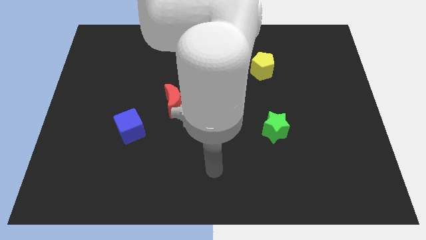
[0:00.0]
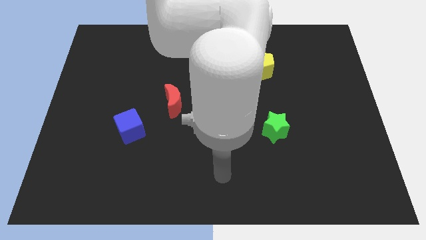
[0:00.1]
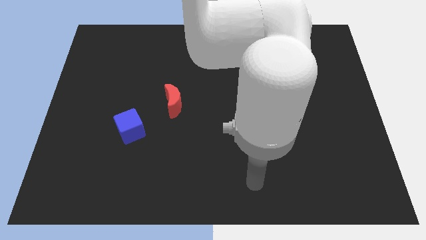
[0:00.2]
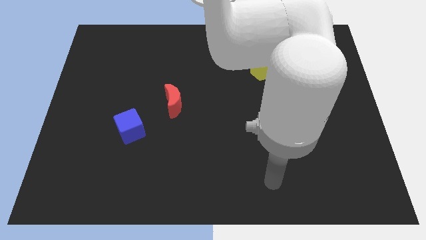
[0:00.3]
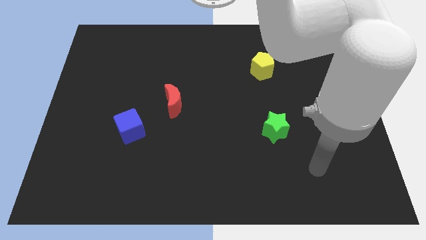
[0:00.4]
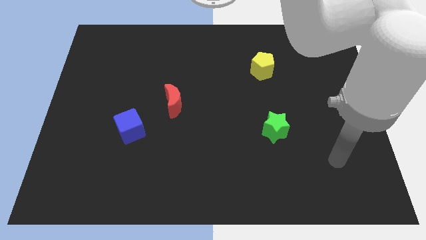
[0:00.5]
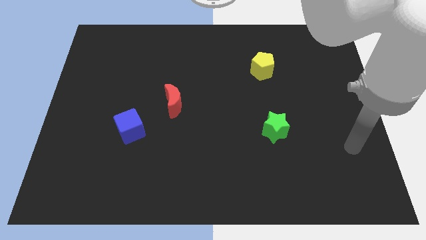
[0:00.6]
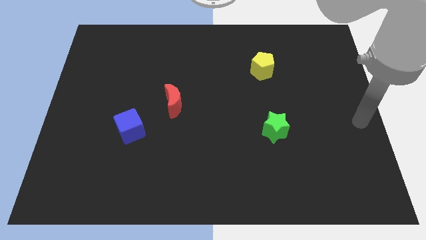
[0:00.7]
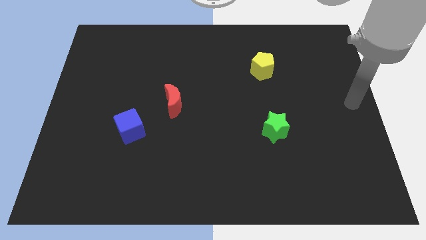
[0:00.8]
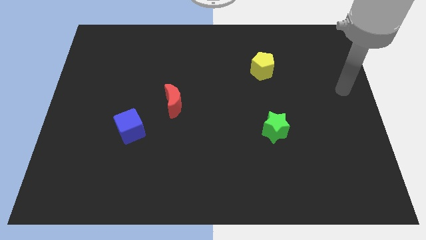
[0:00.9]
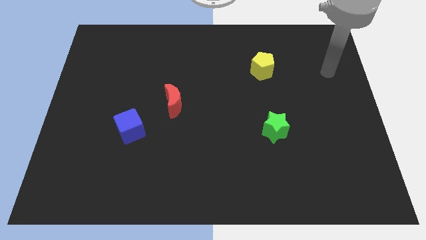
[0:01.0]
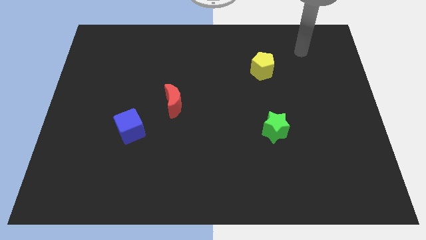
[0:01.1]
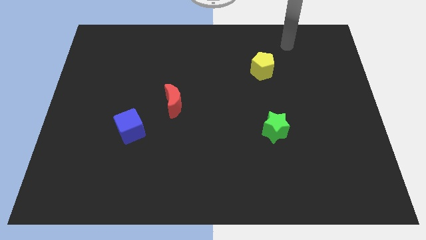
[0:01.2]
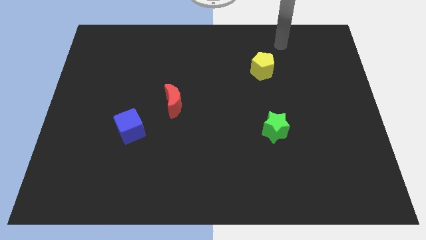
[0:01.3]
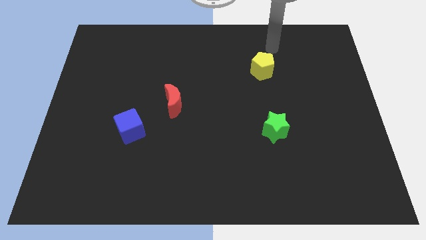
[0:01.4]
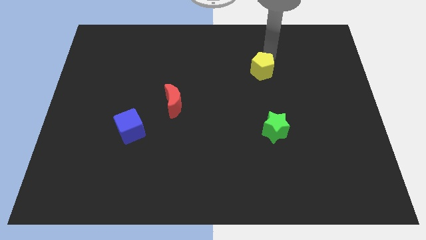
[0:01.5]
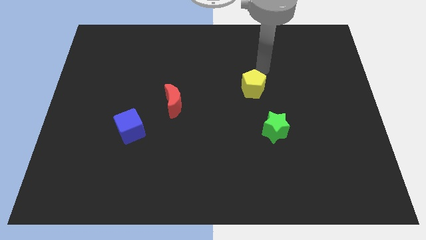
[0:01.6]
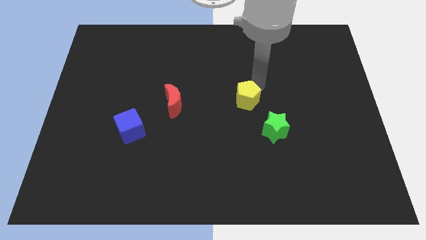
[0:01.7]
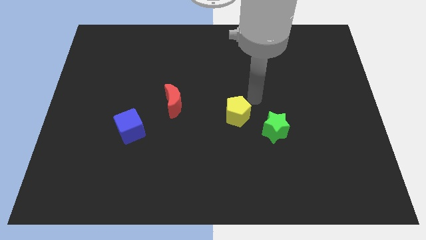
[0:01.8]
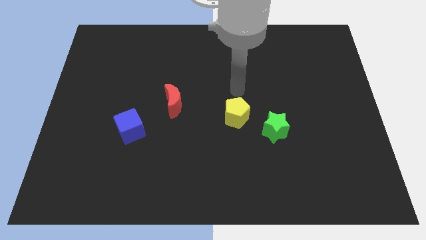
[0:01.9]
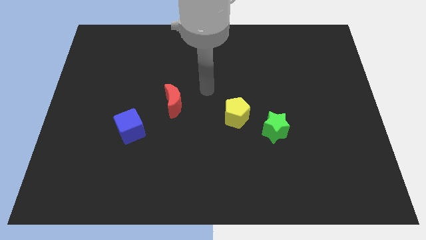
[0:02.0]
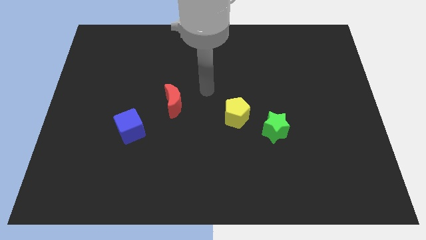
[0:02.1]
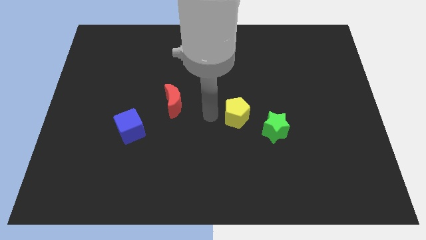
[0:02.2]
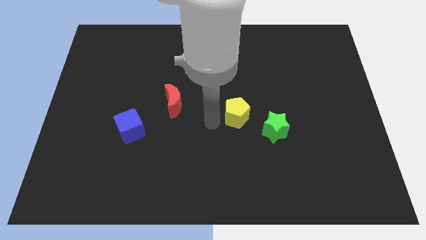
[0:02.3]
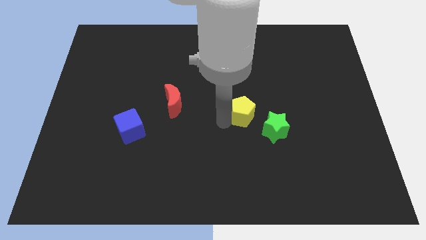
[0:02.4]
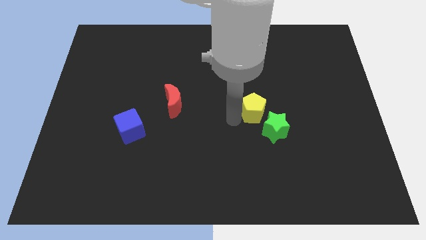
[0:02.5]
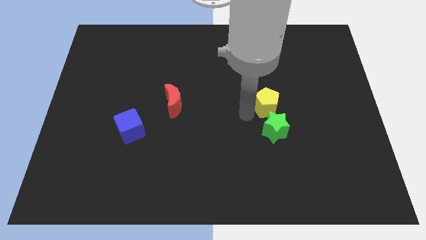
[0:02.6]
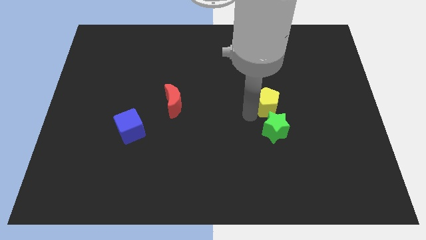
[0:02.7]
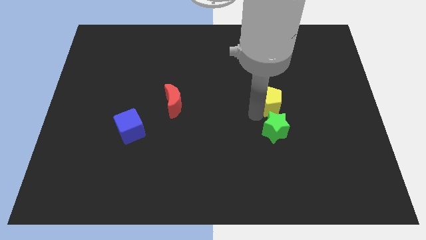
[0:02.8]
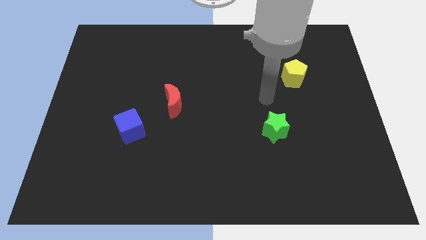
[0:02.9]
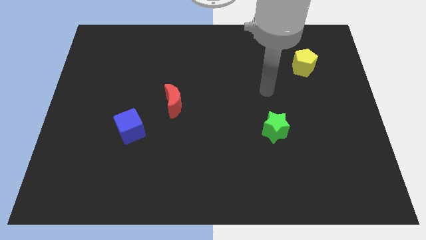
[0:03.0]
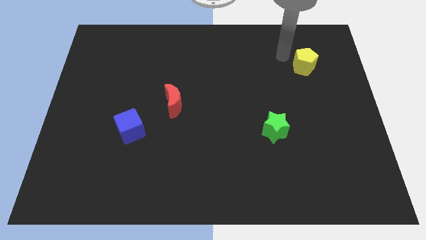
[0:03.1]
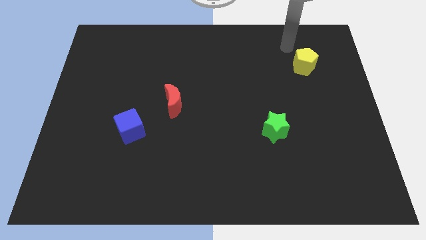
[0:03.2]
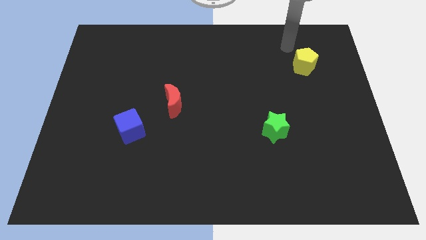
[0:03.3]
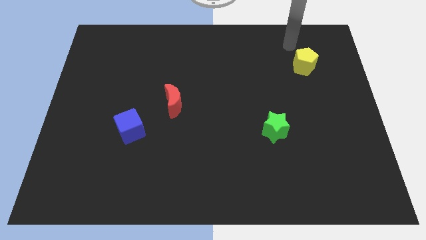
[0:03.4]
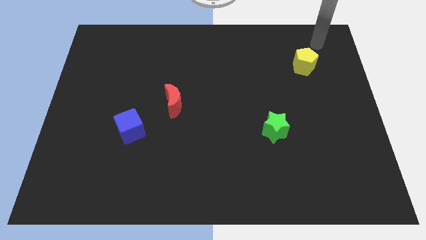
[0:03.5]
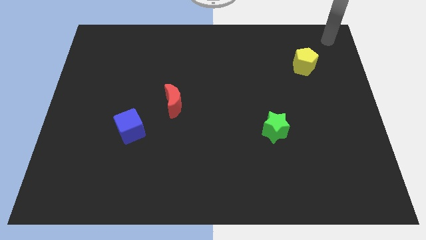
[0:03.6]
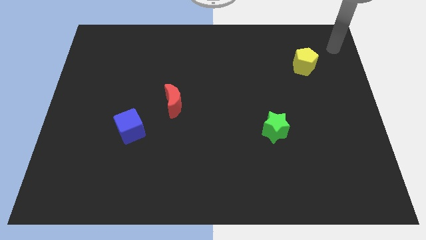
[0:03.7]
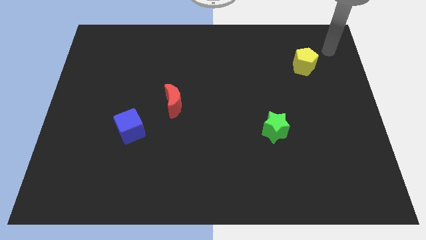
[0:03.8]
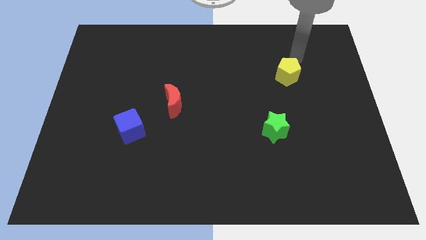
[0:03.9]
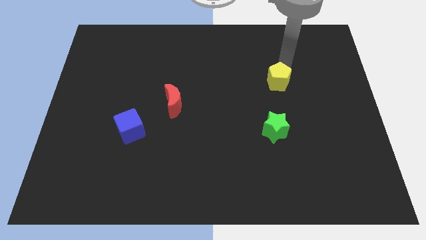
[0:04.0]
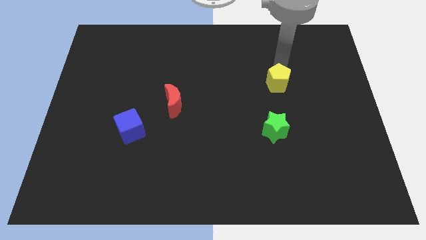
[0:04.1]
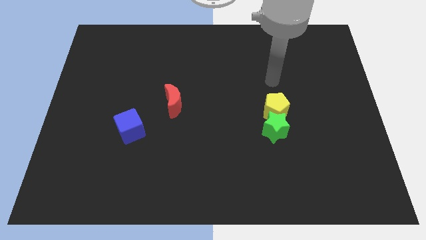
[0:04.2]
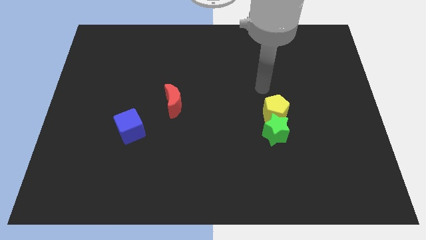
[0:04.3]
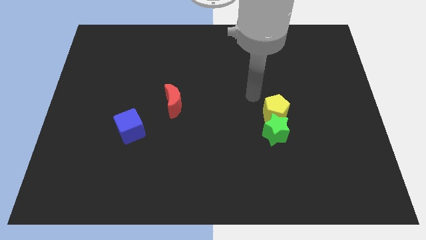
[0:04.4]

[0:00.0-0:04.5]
move the yellow block close to the green star

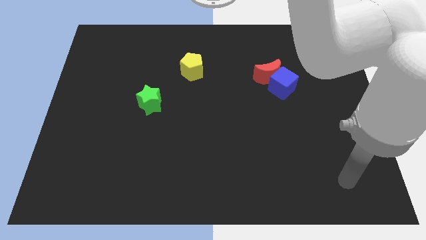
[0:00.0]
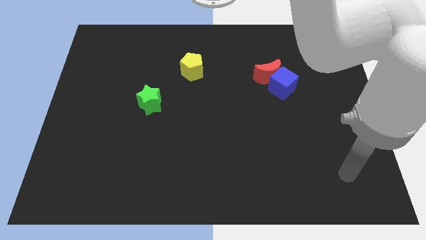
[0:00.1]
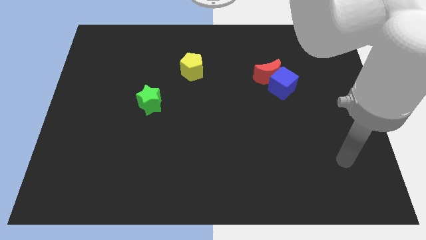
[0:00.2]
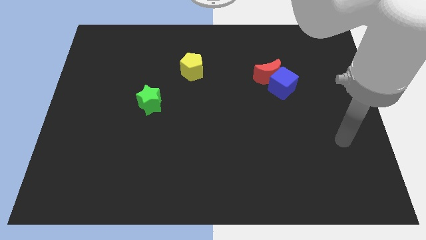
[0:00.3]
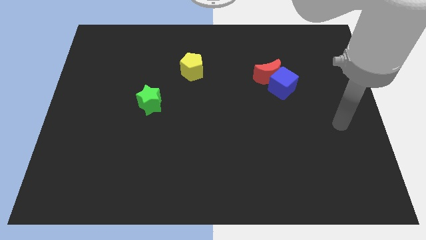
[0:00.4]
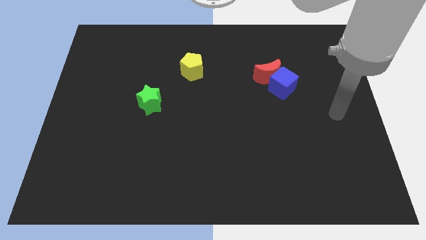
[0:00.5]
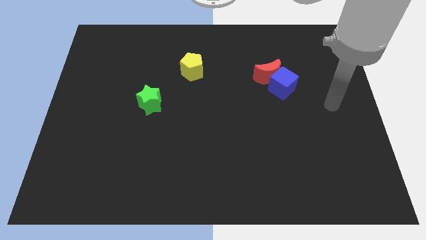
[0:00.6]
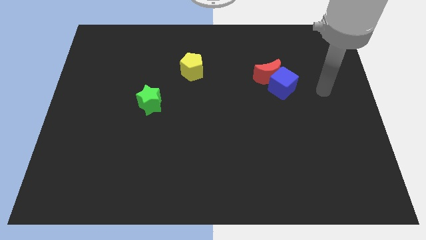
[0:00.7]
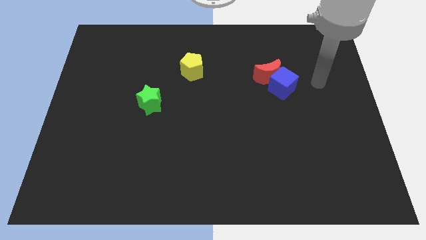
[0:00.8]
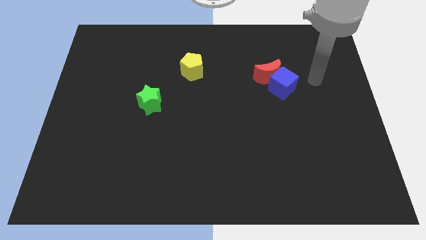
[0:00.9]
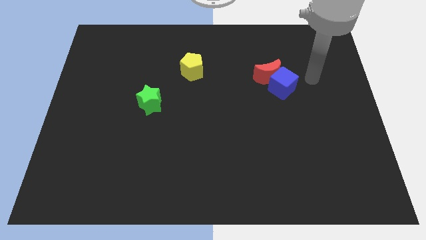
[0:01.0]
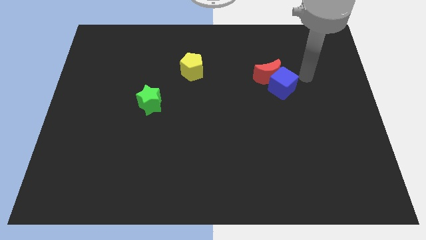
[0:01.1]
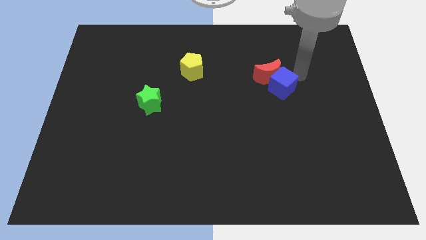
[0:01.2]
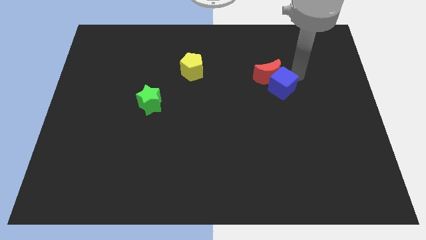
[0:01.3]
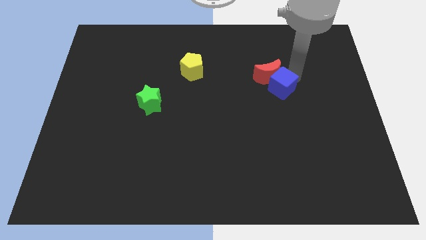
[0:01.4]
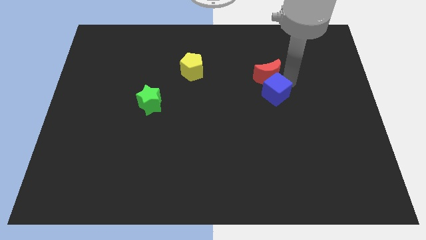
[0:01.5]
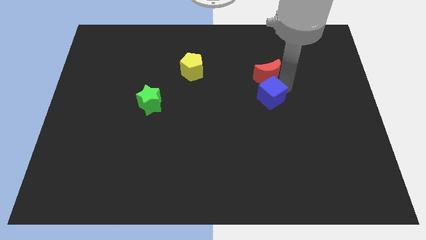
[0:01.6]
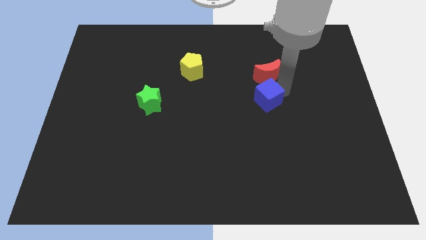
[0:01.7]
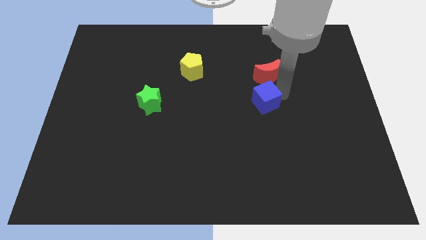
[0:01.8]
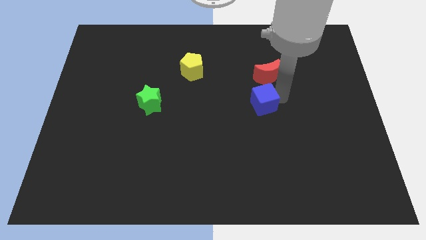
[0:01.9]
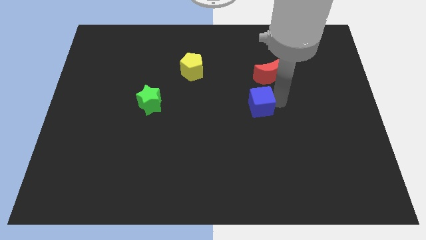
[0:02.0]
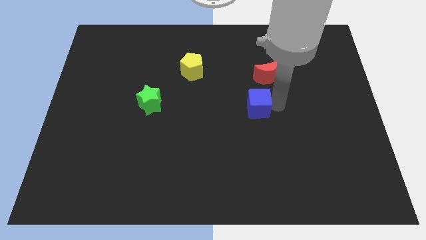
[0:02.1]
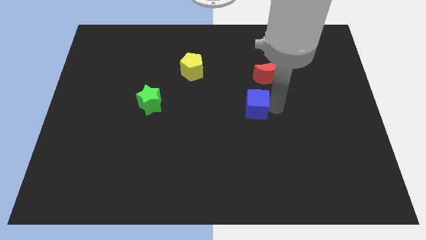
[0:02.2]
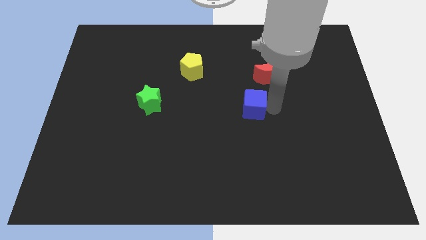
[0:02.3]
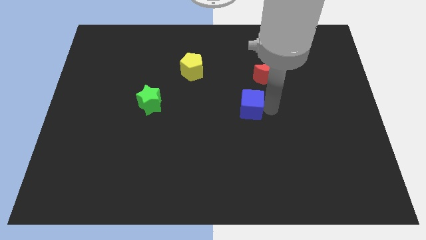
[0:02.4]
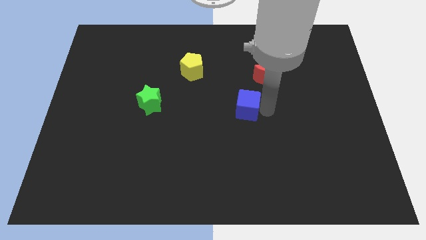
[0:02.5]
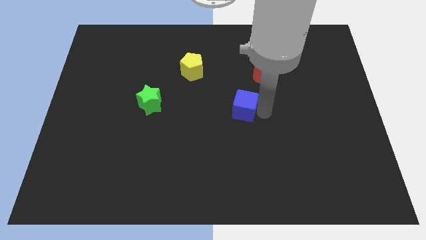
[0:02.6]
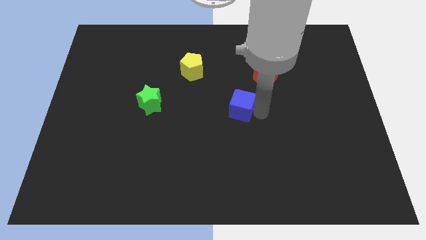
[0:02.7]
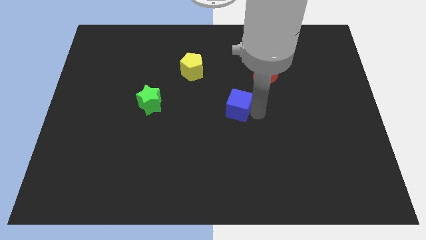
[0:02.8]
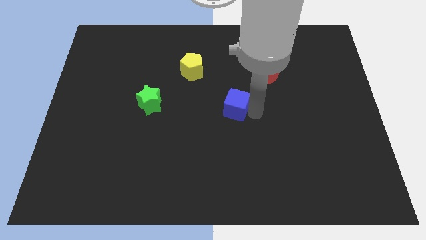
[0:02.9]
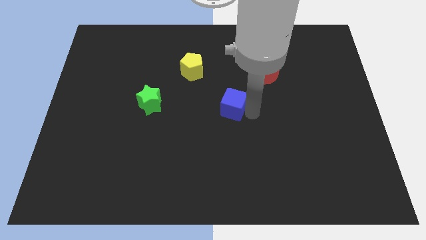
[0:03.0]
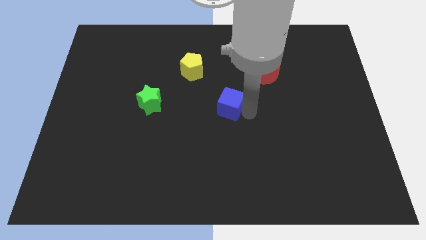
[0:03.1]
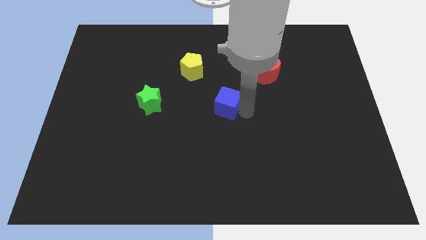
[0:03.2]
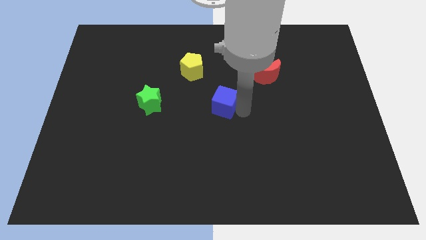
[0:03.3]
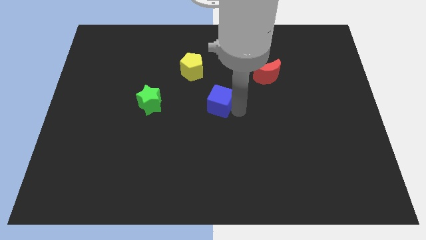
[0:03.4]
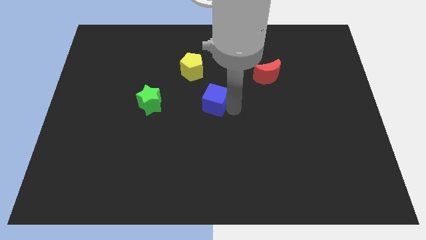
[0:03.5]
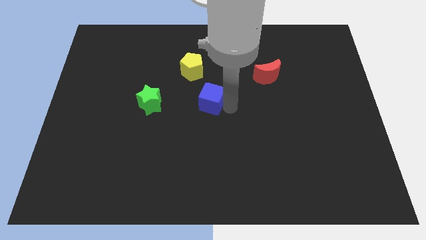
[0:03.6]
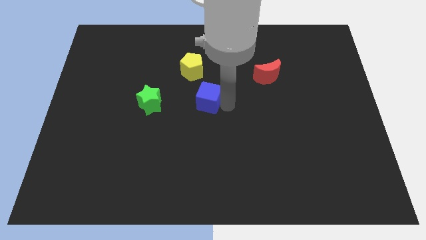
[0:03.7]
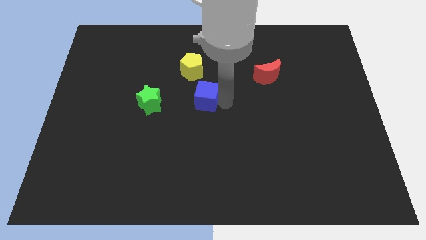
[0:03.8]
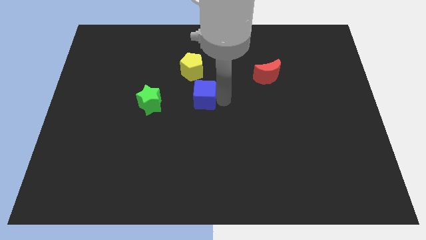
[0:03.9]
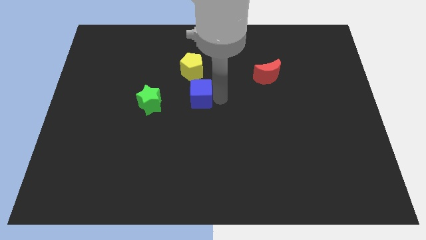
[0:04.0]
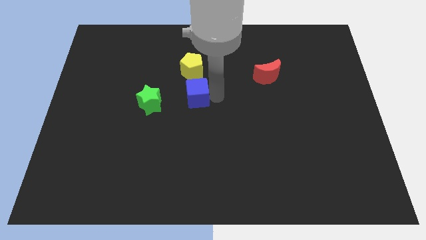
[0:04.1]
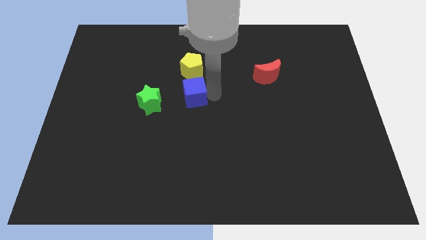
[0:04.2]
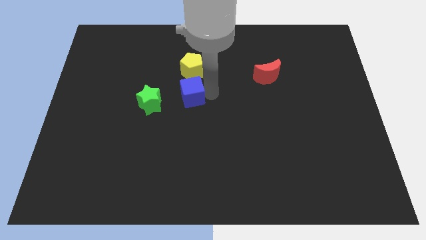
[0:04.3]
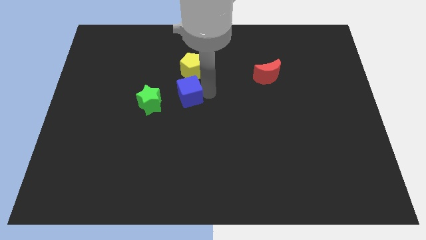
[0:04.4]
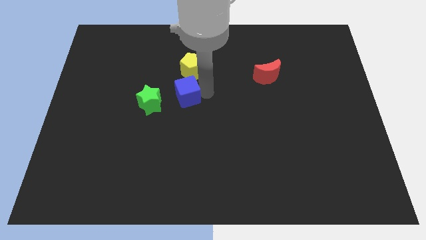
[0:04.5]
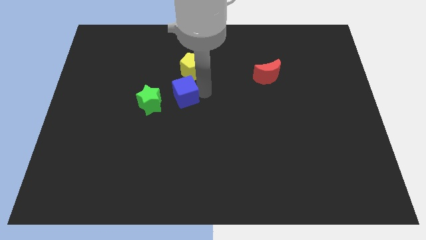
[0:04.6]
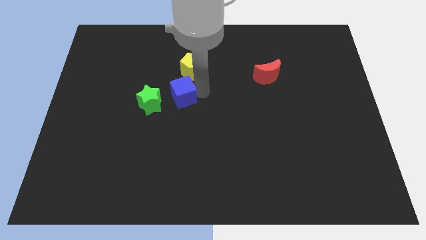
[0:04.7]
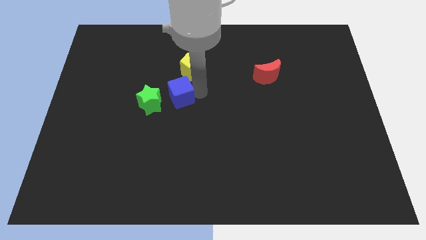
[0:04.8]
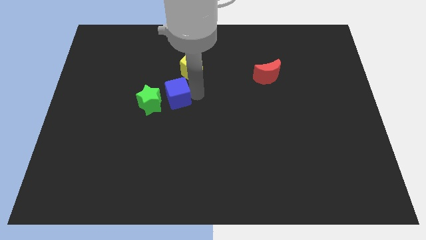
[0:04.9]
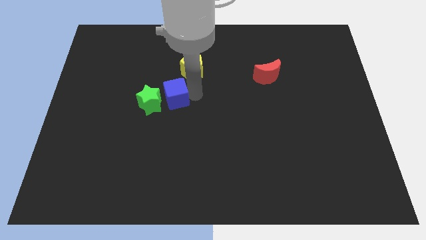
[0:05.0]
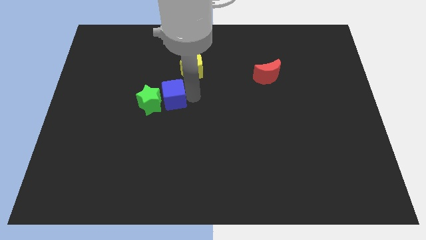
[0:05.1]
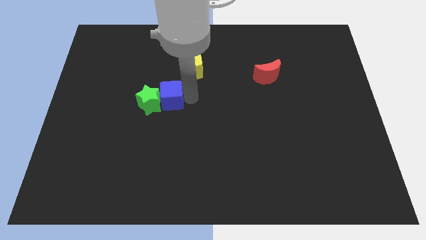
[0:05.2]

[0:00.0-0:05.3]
put the blue block to the green block
